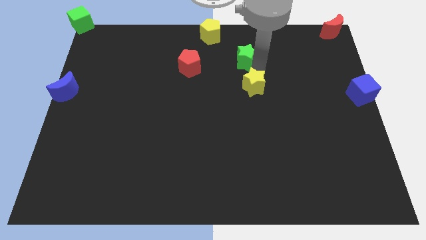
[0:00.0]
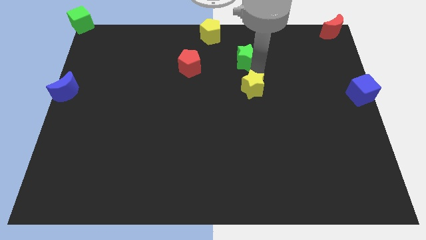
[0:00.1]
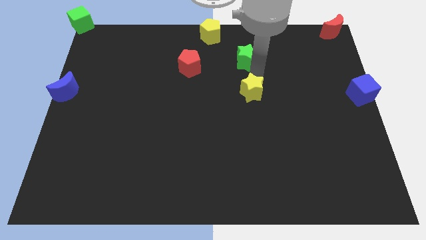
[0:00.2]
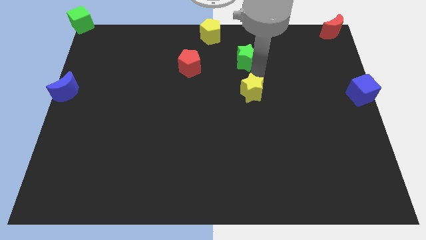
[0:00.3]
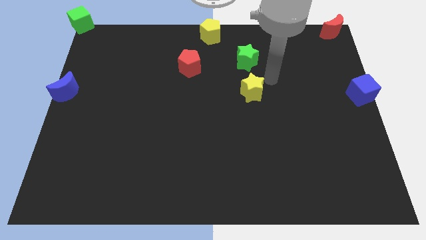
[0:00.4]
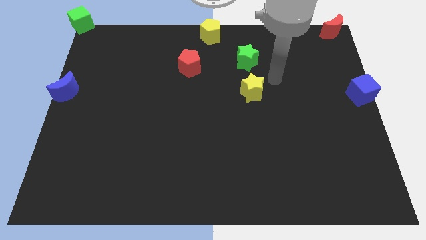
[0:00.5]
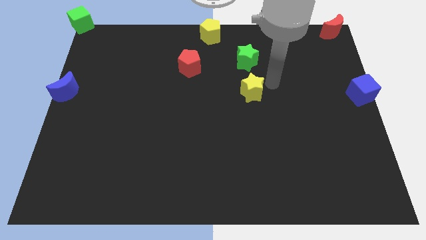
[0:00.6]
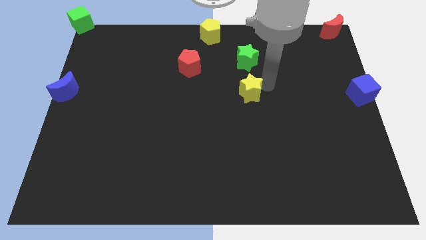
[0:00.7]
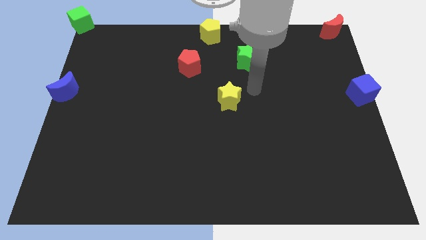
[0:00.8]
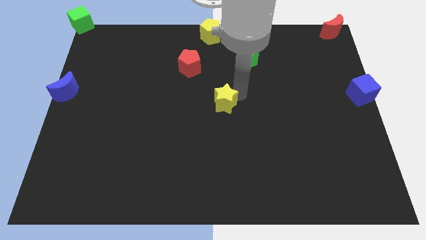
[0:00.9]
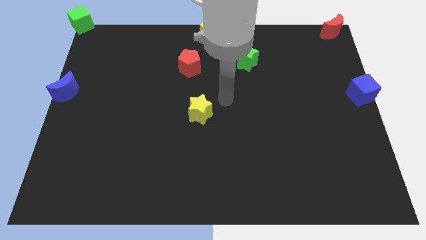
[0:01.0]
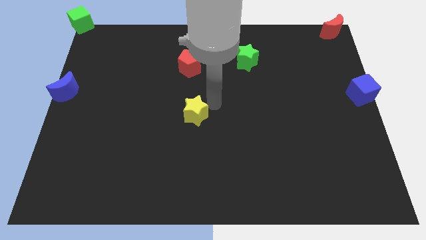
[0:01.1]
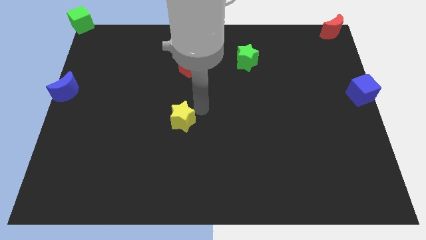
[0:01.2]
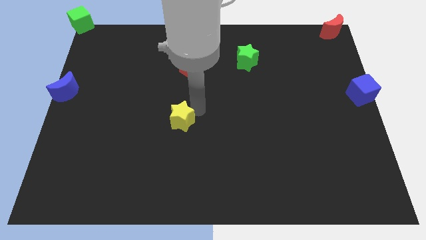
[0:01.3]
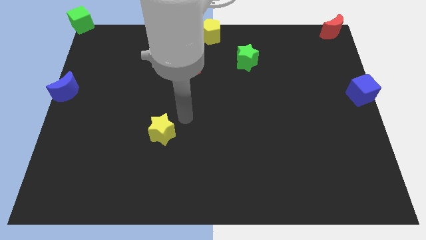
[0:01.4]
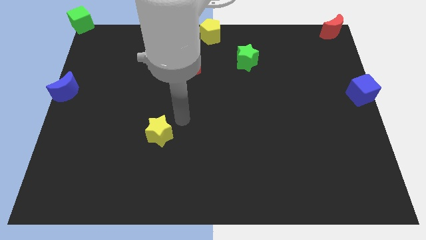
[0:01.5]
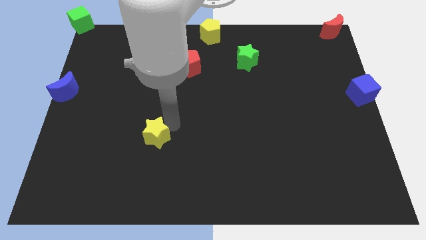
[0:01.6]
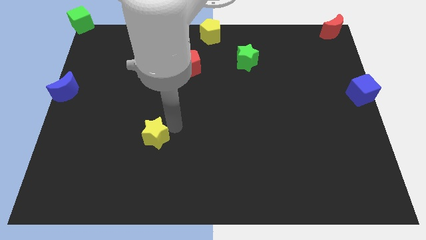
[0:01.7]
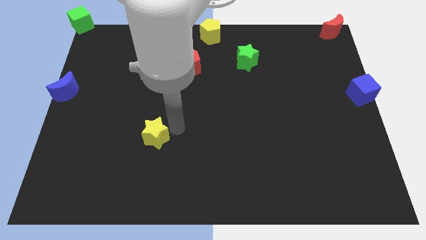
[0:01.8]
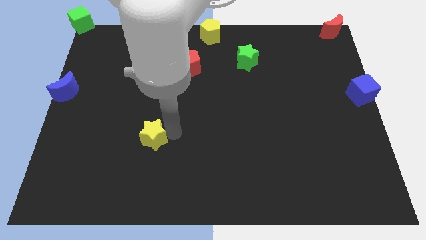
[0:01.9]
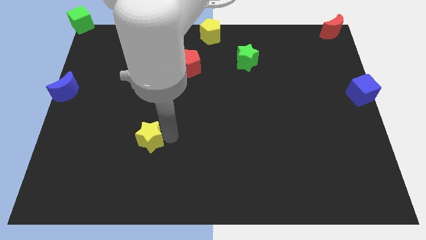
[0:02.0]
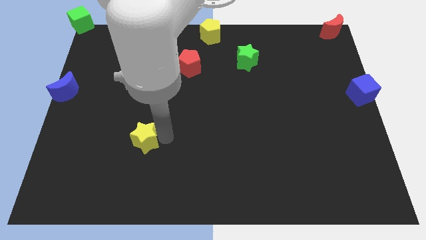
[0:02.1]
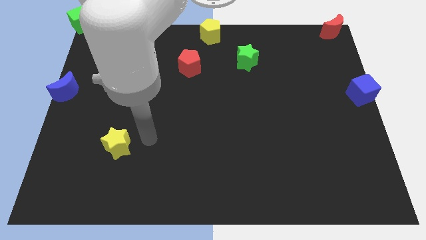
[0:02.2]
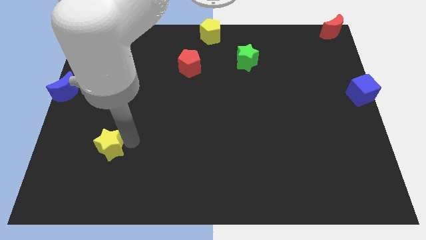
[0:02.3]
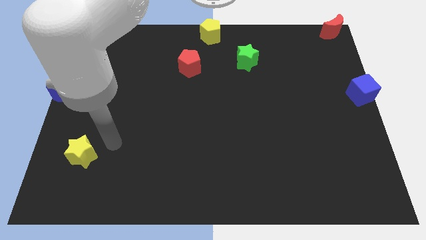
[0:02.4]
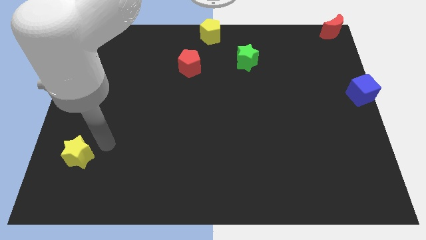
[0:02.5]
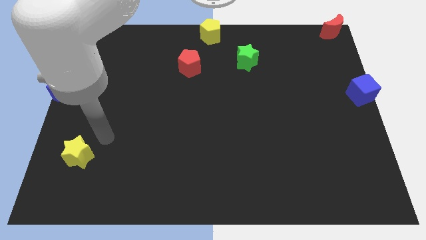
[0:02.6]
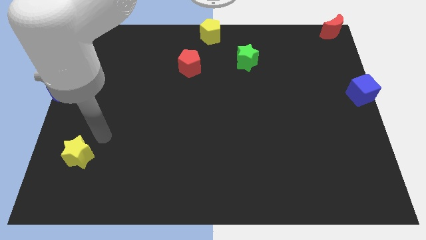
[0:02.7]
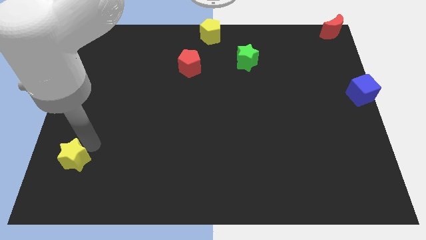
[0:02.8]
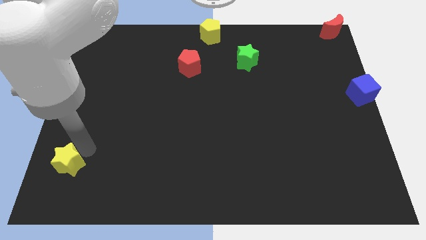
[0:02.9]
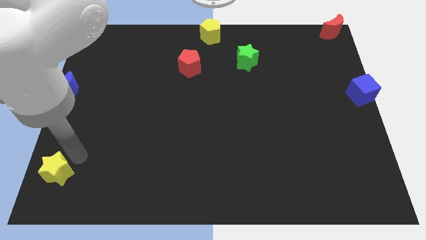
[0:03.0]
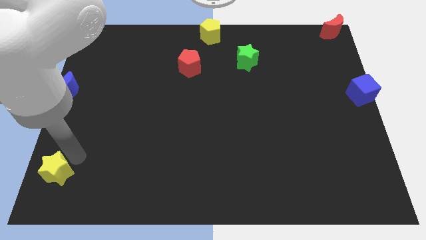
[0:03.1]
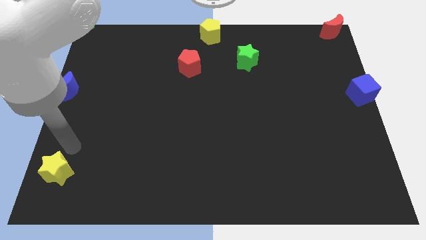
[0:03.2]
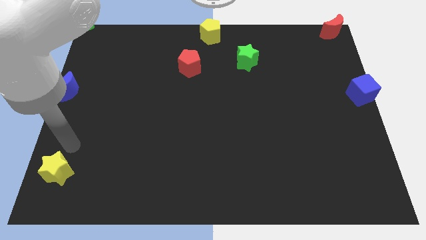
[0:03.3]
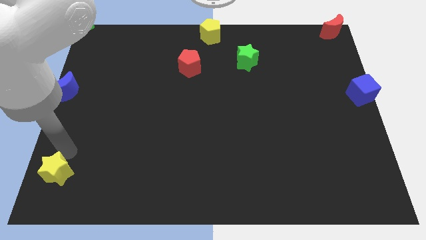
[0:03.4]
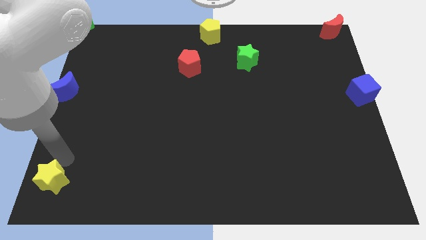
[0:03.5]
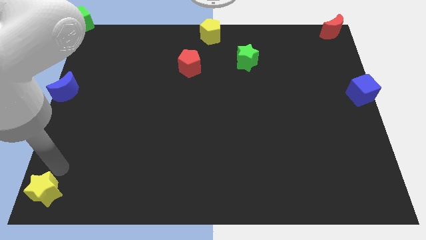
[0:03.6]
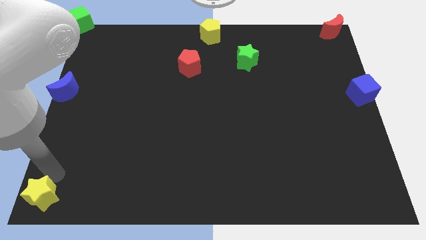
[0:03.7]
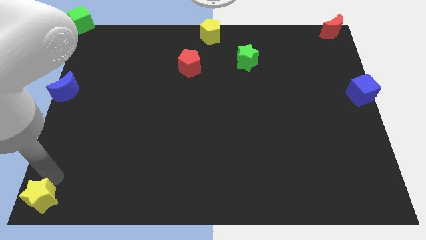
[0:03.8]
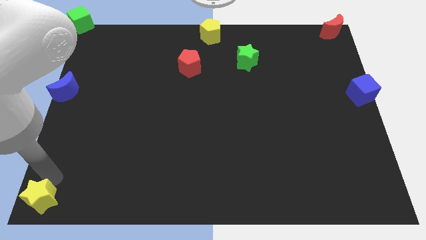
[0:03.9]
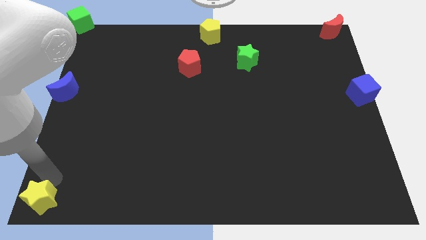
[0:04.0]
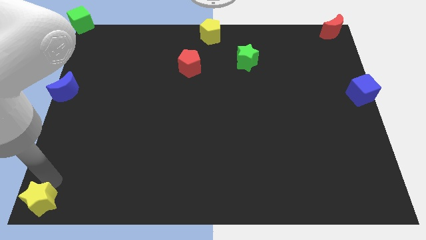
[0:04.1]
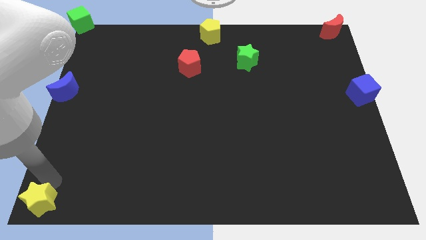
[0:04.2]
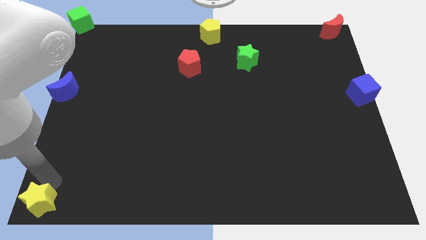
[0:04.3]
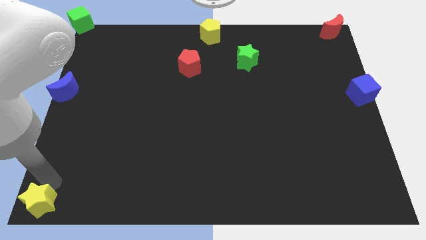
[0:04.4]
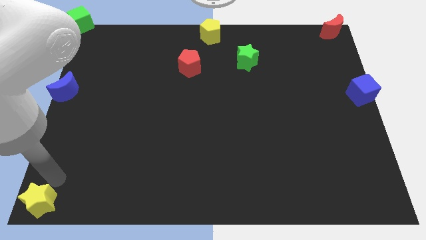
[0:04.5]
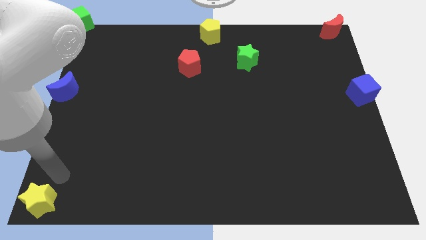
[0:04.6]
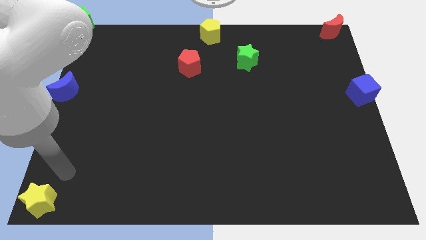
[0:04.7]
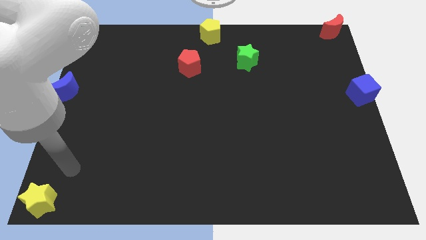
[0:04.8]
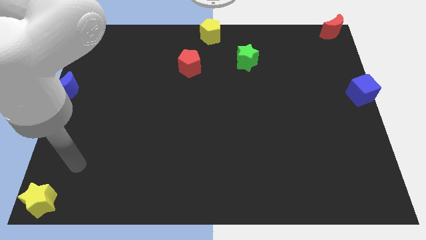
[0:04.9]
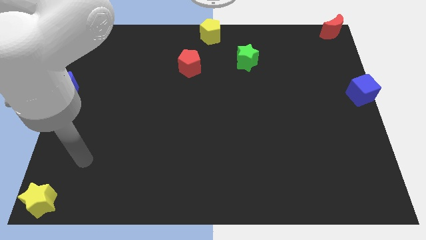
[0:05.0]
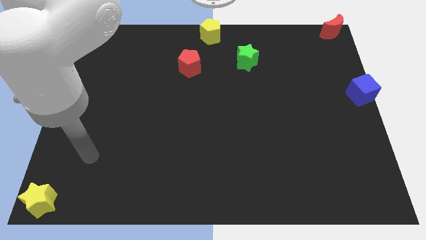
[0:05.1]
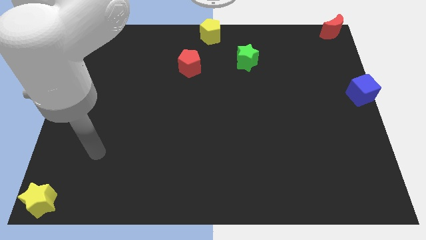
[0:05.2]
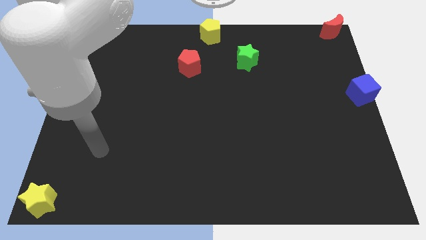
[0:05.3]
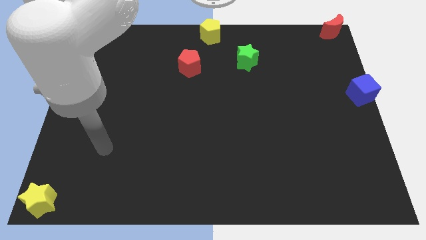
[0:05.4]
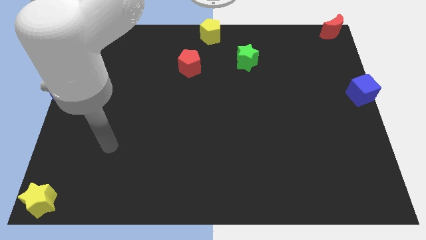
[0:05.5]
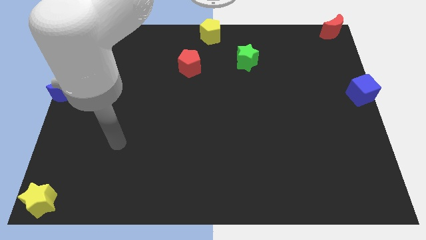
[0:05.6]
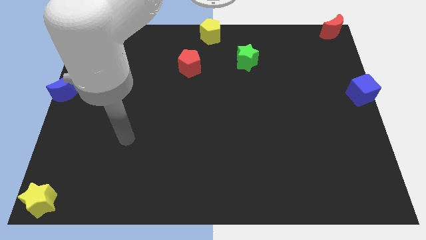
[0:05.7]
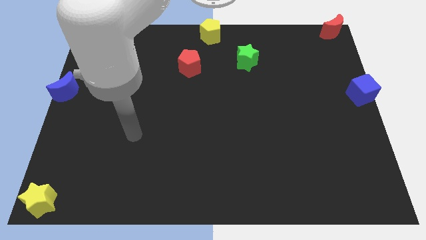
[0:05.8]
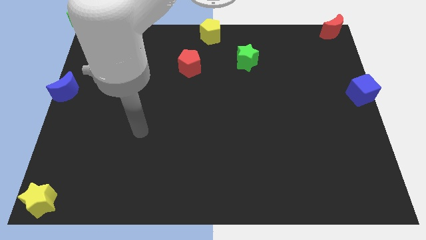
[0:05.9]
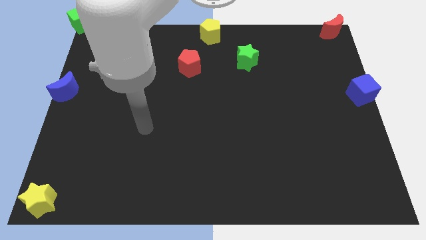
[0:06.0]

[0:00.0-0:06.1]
move the yellow star on the bottom left of the board

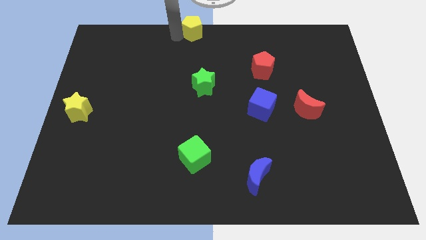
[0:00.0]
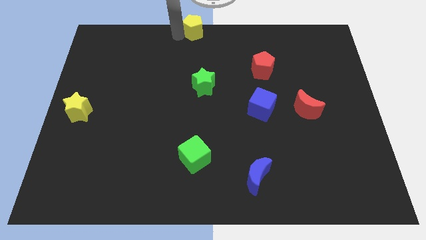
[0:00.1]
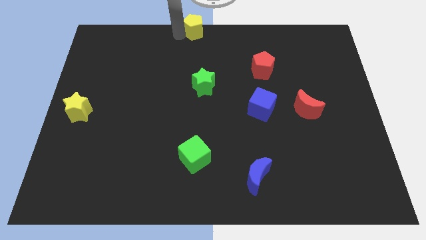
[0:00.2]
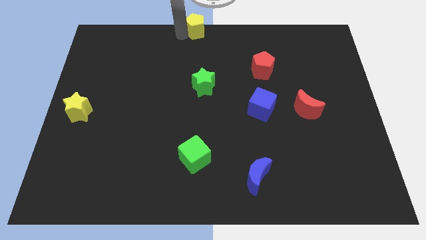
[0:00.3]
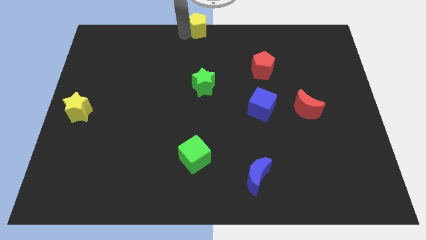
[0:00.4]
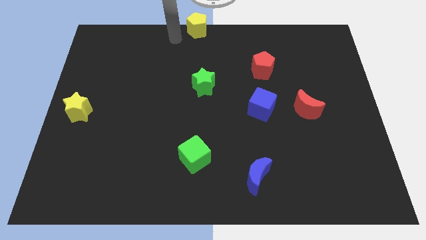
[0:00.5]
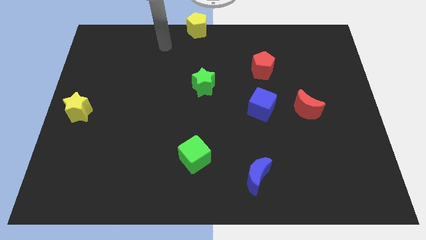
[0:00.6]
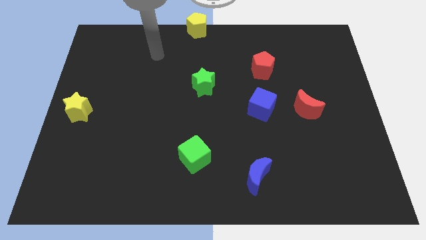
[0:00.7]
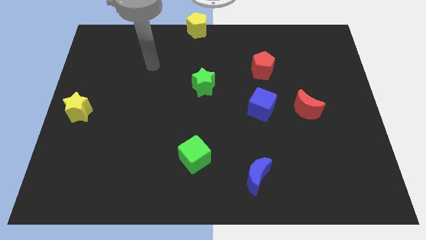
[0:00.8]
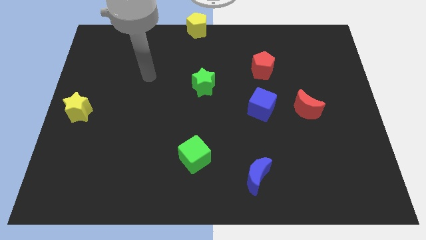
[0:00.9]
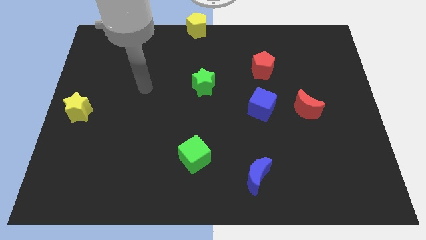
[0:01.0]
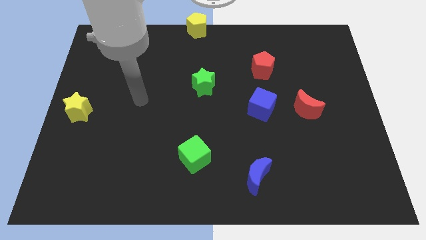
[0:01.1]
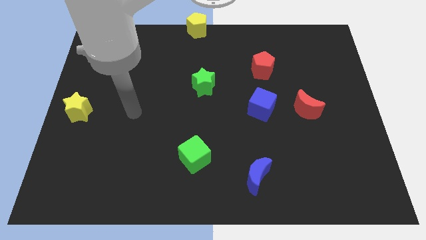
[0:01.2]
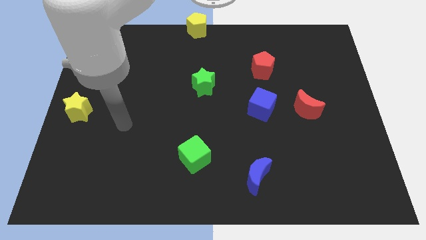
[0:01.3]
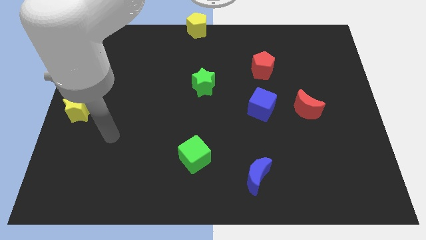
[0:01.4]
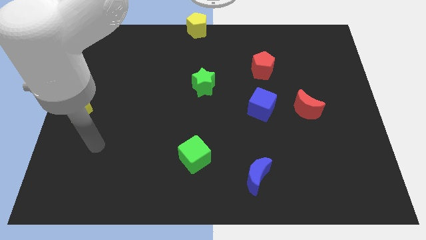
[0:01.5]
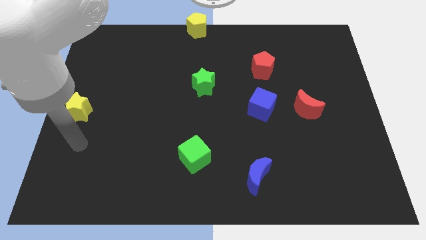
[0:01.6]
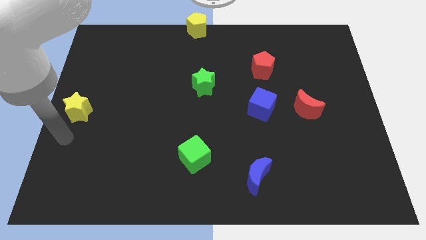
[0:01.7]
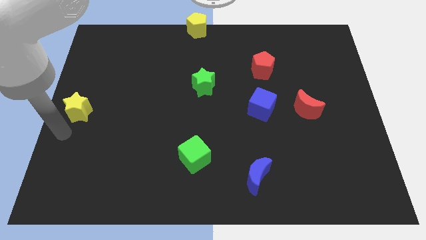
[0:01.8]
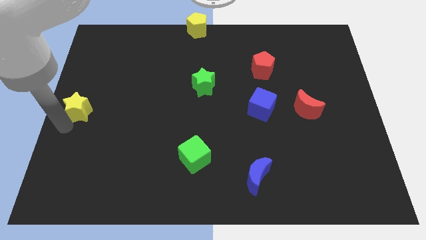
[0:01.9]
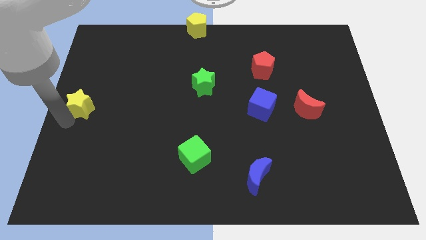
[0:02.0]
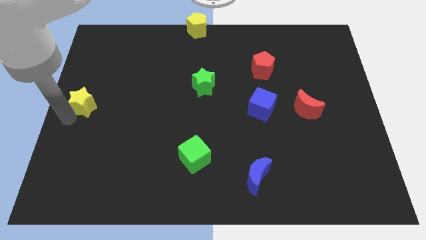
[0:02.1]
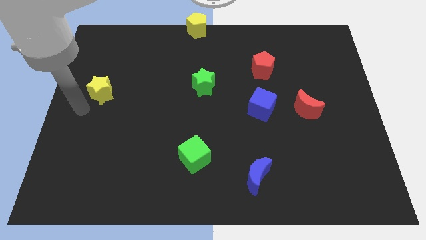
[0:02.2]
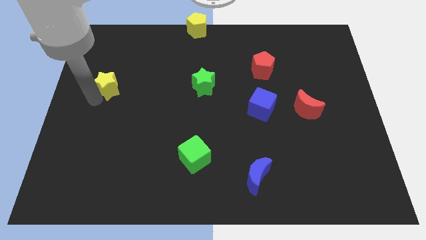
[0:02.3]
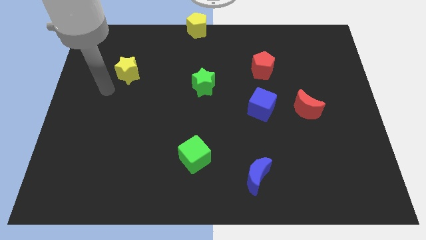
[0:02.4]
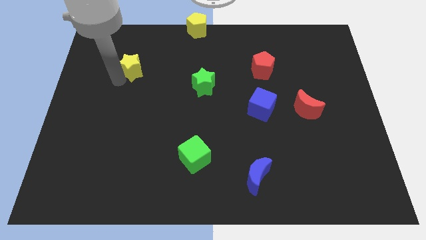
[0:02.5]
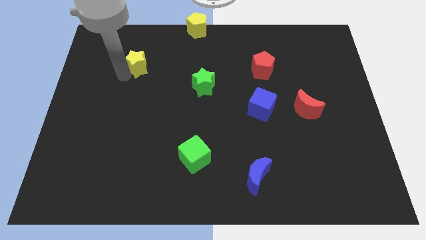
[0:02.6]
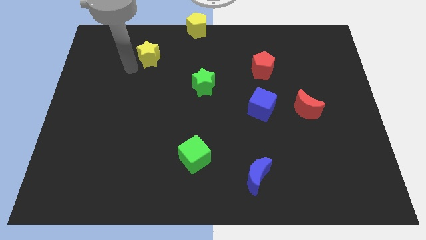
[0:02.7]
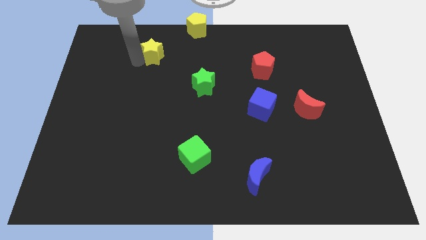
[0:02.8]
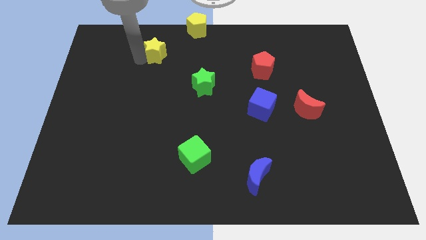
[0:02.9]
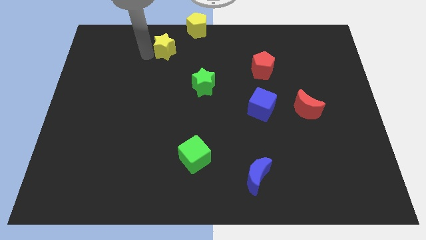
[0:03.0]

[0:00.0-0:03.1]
push the yellow star towards the top center
